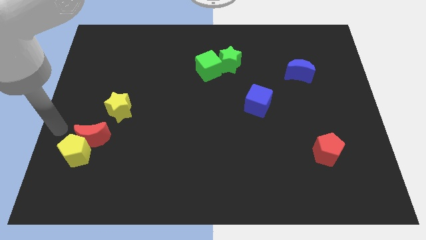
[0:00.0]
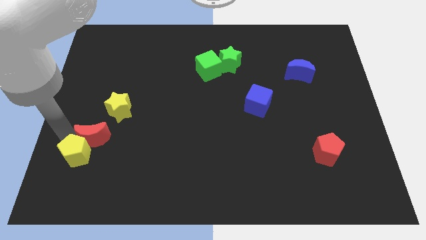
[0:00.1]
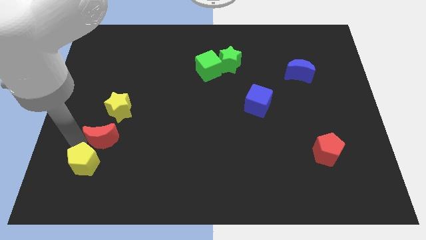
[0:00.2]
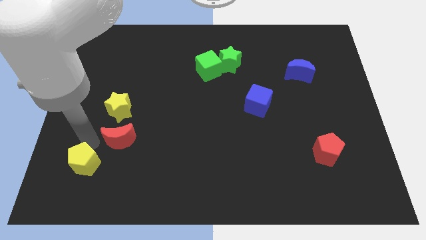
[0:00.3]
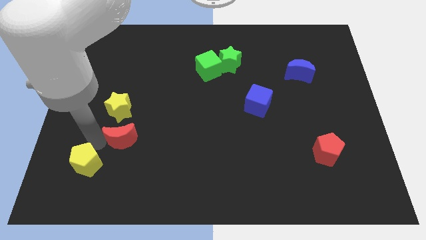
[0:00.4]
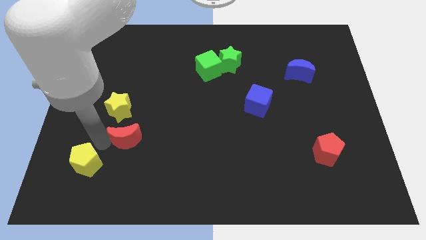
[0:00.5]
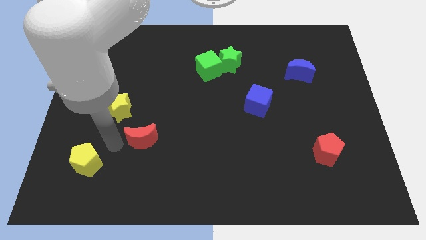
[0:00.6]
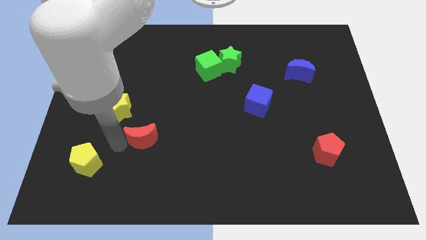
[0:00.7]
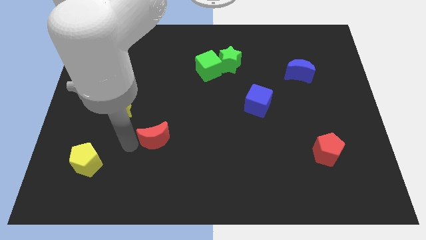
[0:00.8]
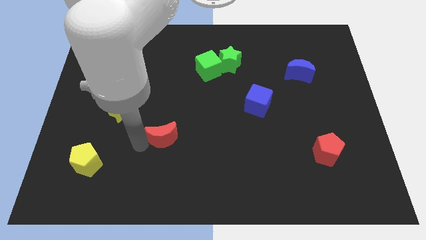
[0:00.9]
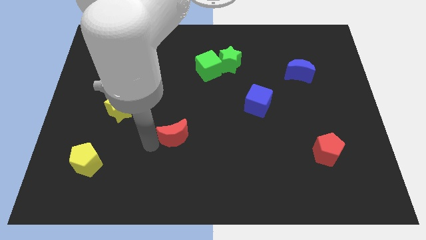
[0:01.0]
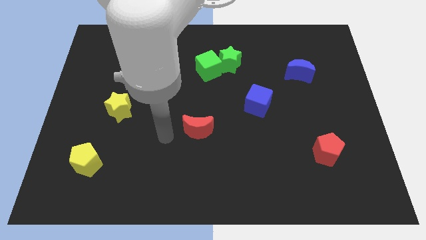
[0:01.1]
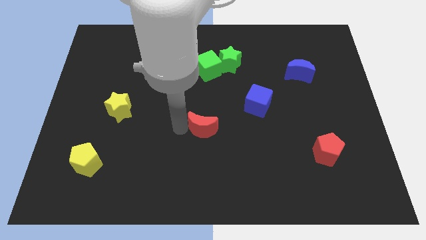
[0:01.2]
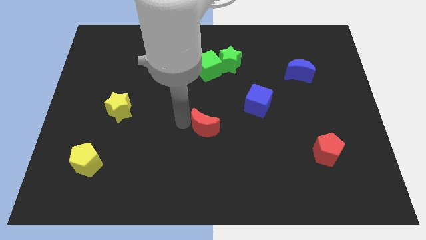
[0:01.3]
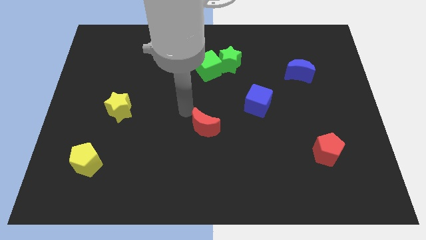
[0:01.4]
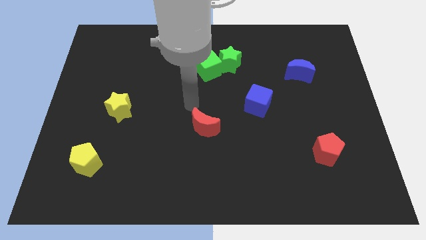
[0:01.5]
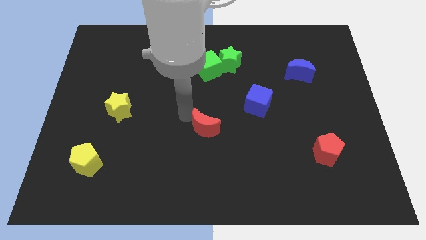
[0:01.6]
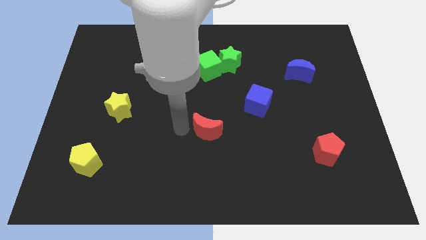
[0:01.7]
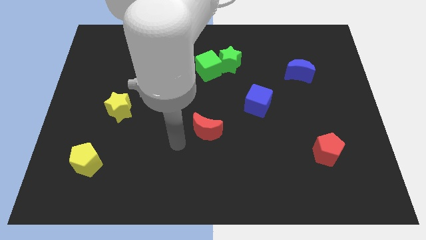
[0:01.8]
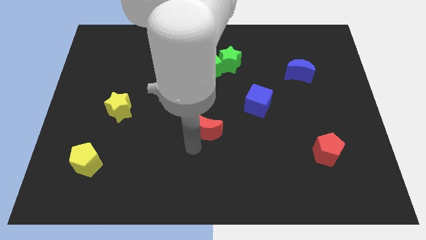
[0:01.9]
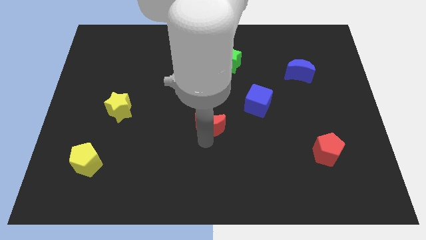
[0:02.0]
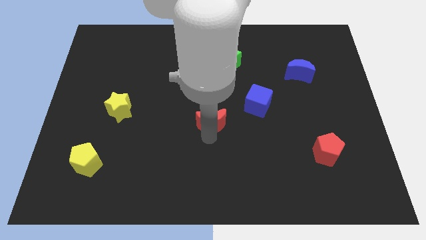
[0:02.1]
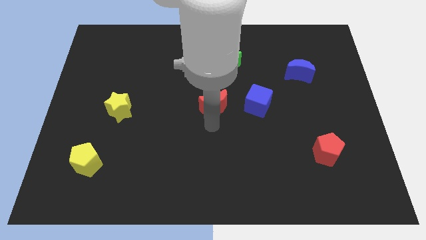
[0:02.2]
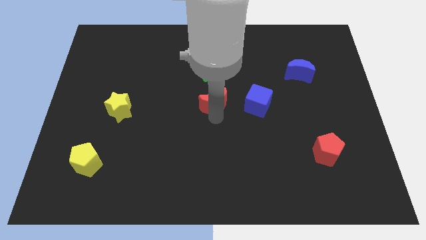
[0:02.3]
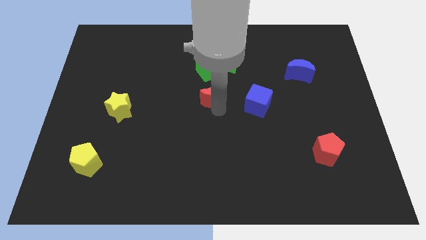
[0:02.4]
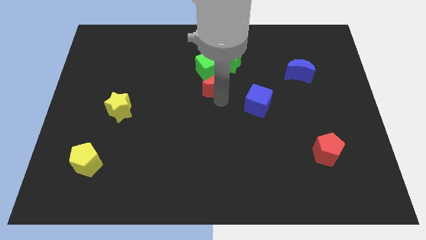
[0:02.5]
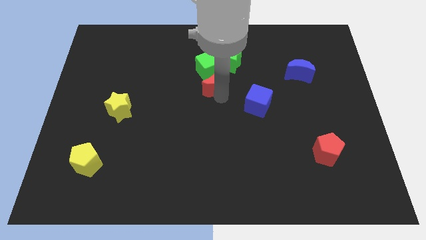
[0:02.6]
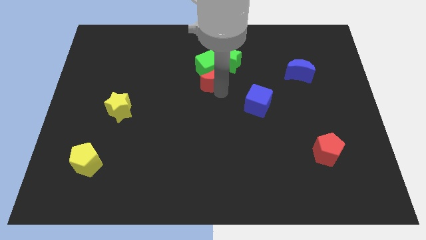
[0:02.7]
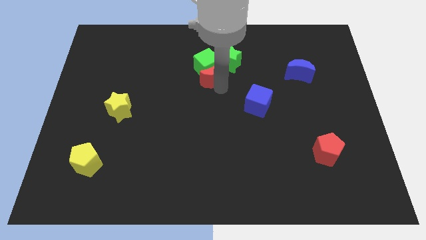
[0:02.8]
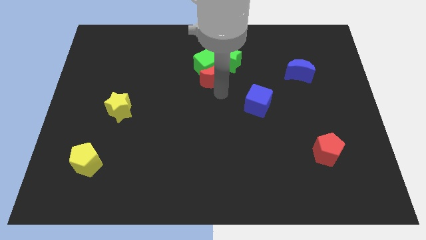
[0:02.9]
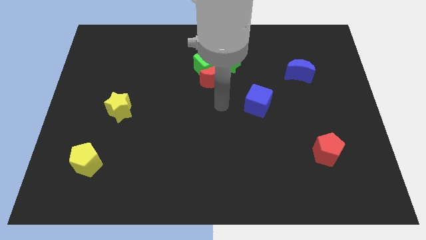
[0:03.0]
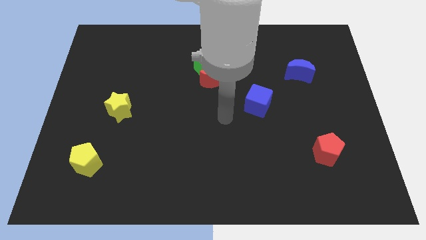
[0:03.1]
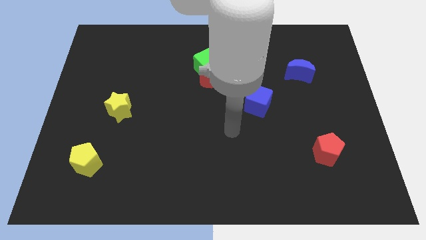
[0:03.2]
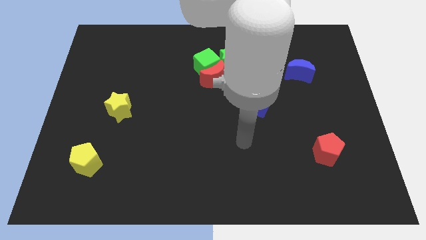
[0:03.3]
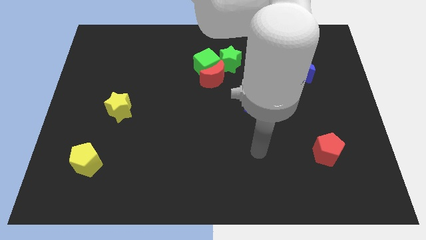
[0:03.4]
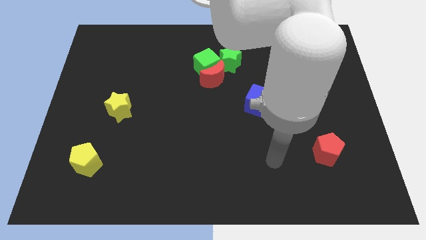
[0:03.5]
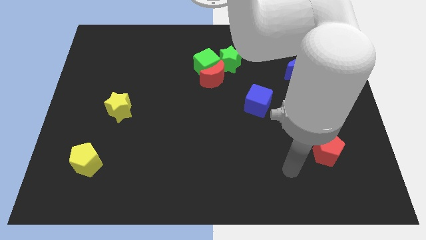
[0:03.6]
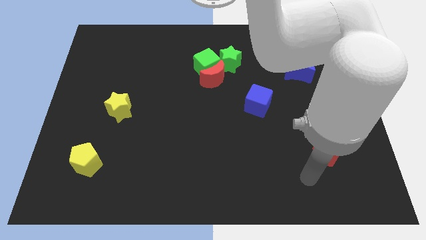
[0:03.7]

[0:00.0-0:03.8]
push the red crescent into the green cube

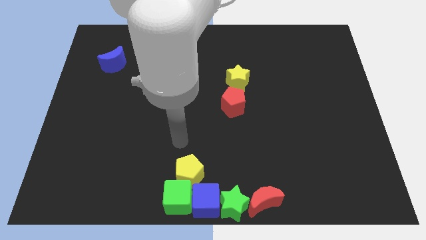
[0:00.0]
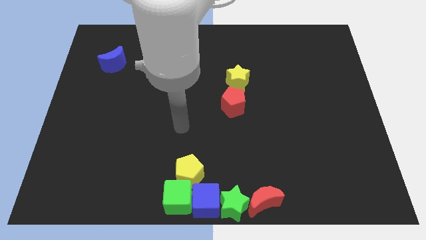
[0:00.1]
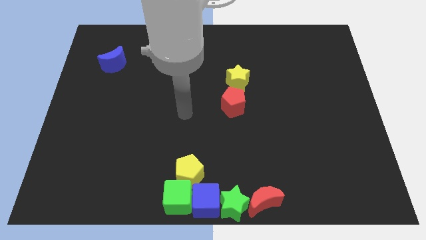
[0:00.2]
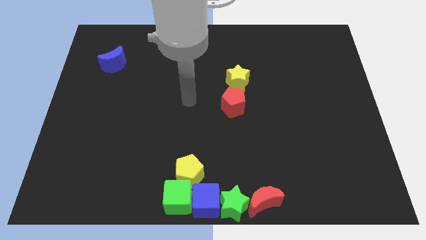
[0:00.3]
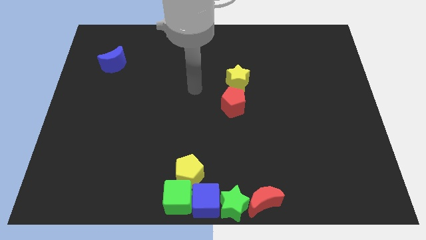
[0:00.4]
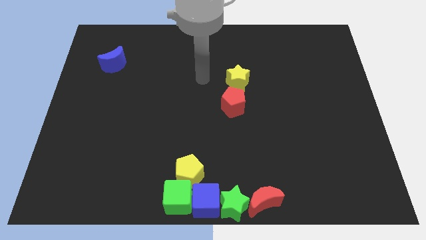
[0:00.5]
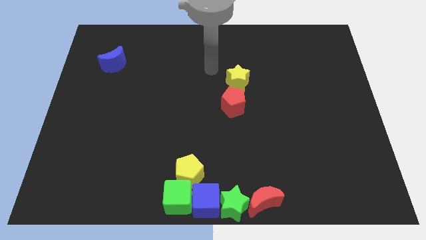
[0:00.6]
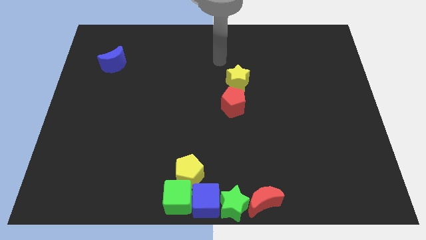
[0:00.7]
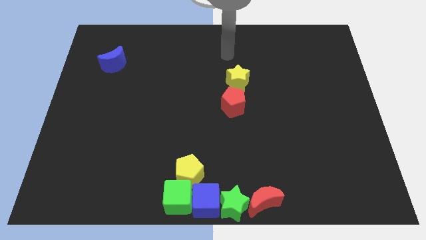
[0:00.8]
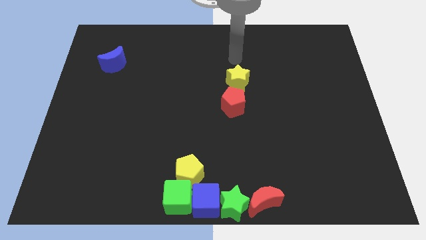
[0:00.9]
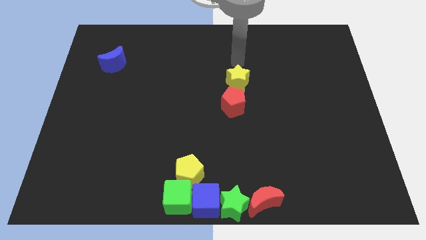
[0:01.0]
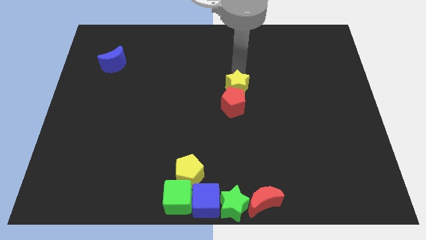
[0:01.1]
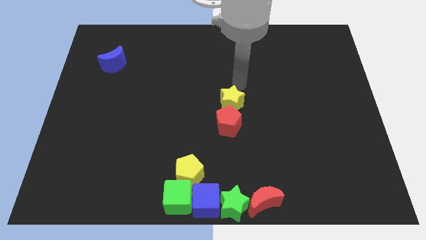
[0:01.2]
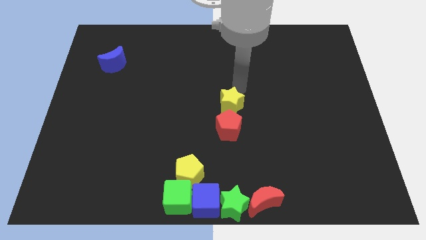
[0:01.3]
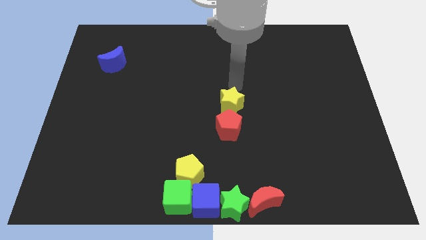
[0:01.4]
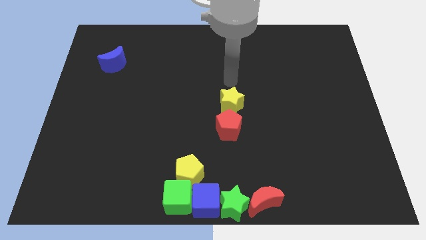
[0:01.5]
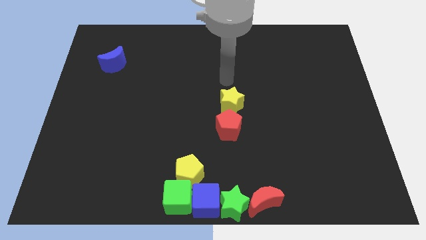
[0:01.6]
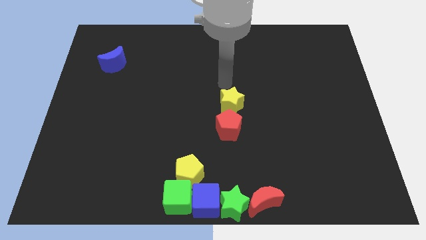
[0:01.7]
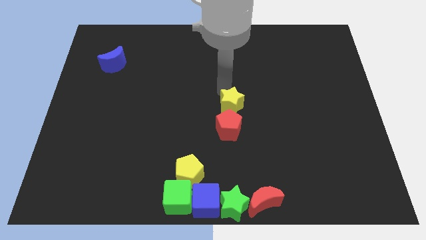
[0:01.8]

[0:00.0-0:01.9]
move the yellow star along with red pentagon slightly to the bottom side of the board

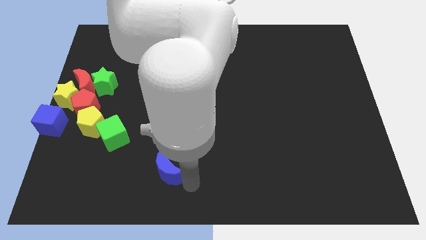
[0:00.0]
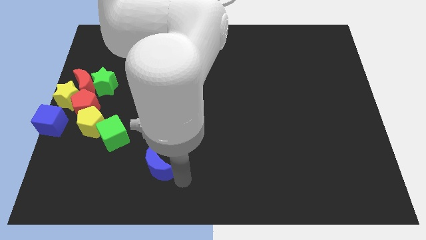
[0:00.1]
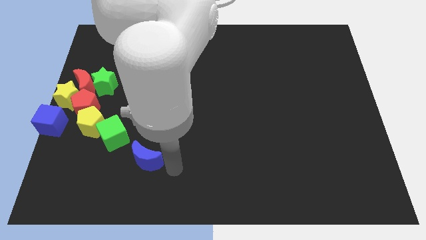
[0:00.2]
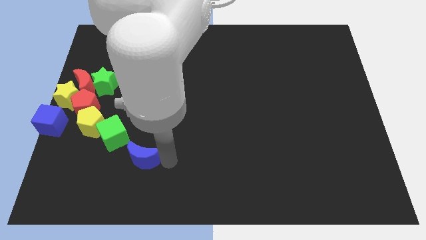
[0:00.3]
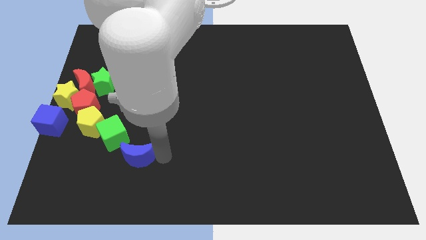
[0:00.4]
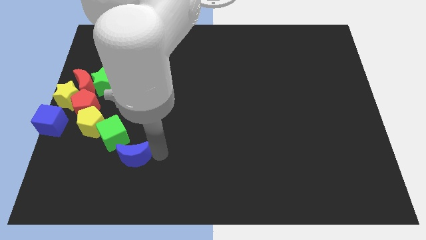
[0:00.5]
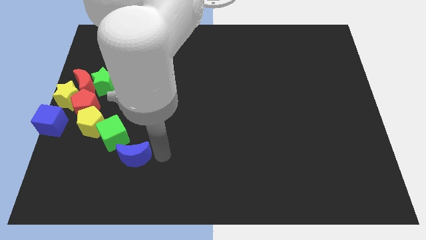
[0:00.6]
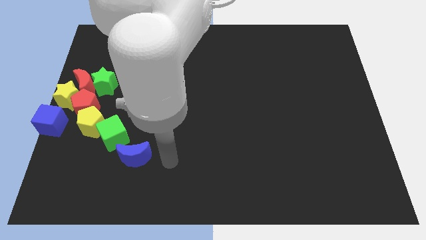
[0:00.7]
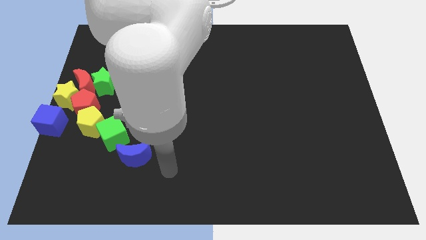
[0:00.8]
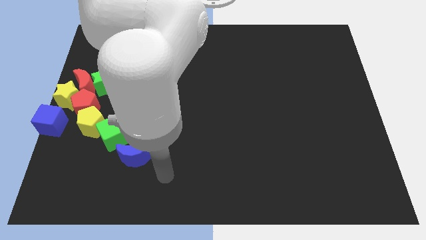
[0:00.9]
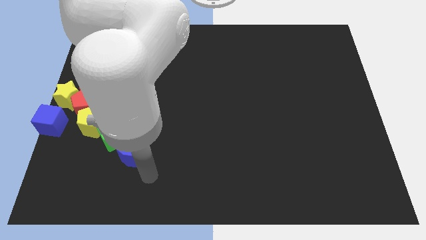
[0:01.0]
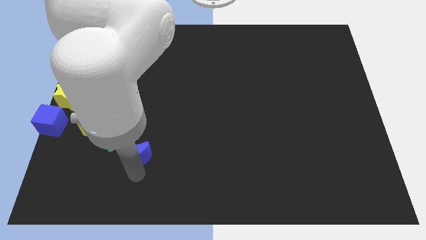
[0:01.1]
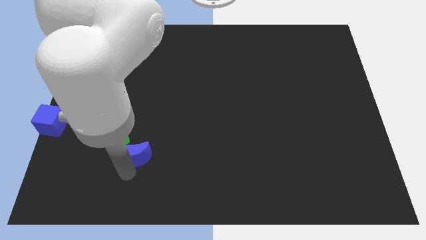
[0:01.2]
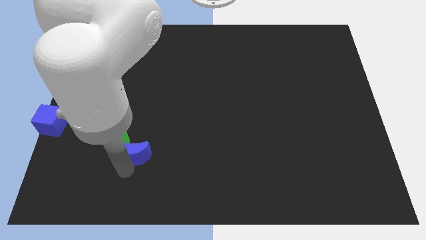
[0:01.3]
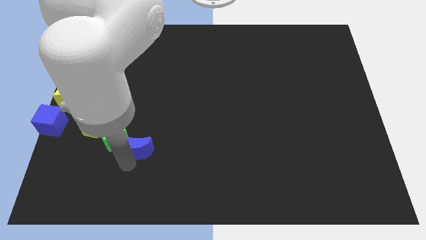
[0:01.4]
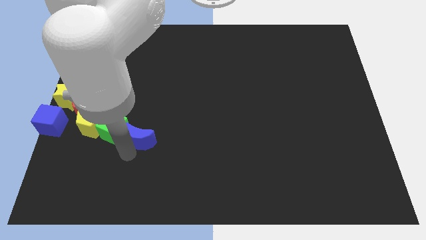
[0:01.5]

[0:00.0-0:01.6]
slide the blue moon into the right side of the green cube

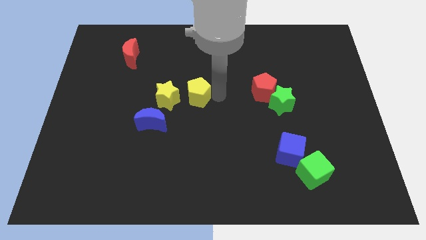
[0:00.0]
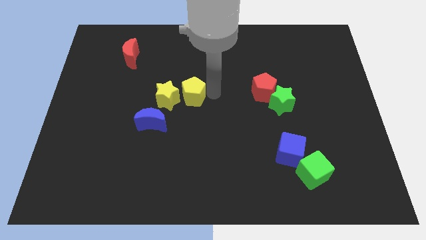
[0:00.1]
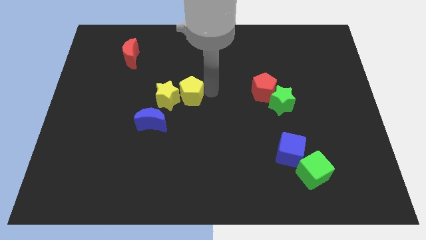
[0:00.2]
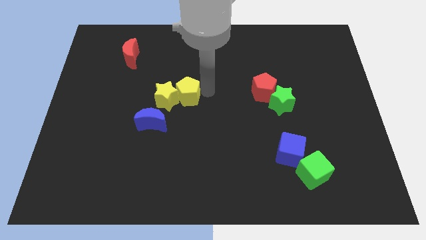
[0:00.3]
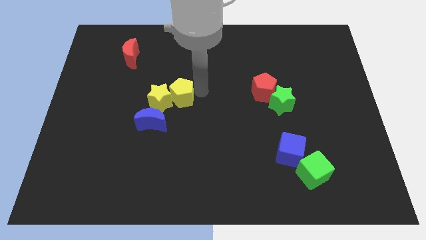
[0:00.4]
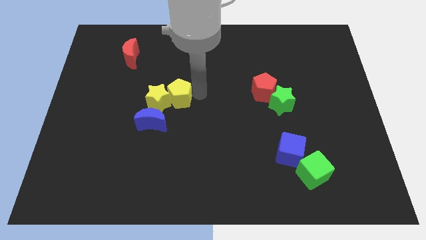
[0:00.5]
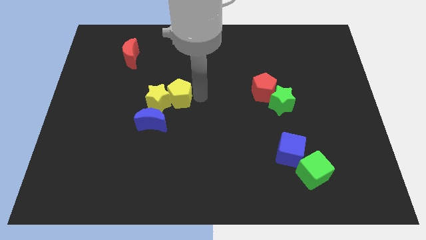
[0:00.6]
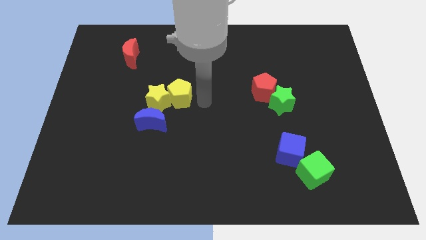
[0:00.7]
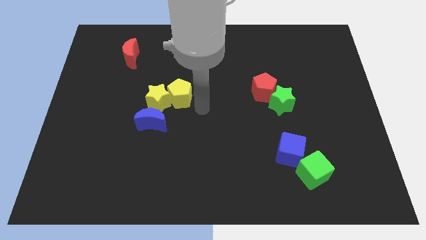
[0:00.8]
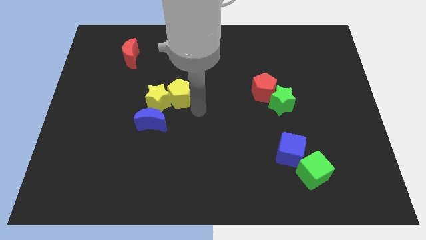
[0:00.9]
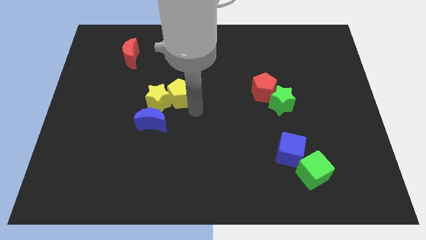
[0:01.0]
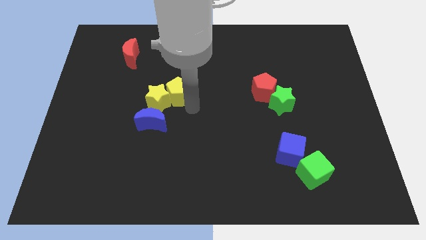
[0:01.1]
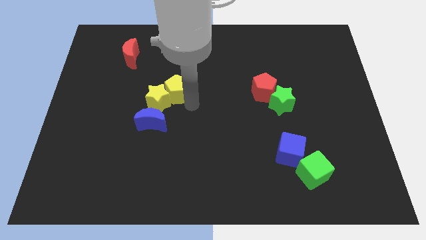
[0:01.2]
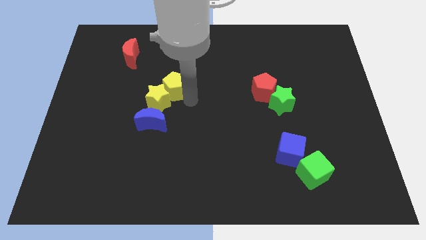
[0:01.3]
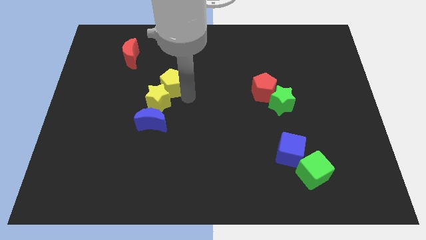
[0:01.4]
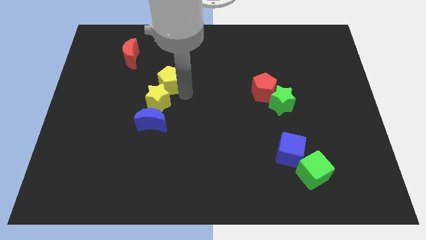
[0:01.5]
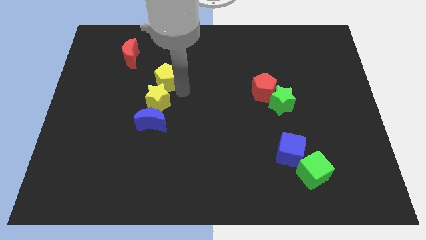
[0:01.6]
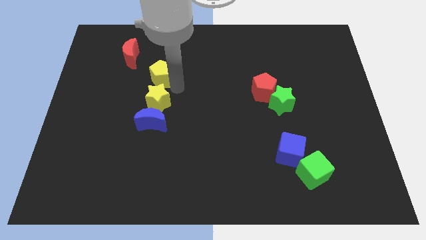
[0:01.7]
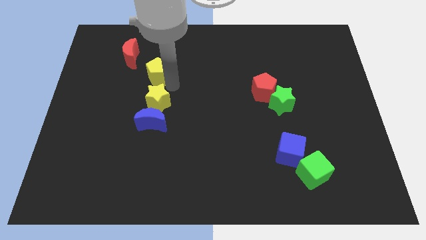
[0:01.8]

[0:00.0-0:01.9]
place the yellow pentagon above the yellow star
